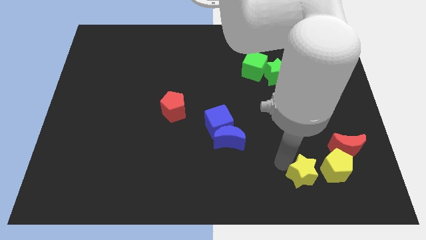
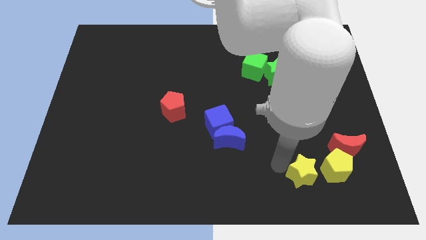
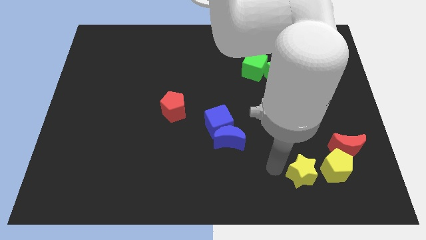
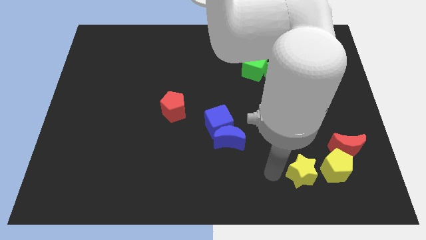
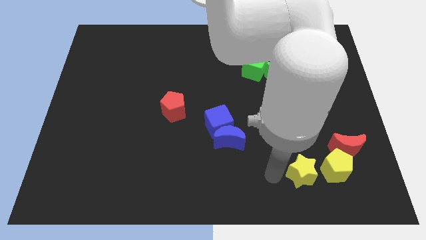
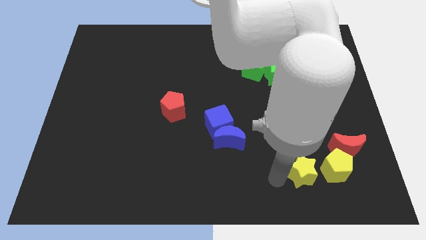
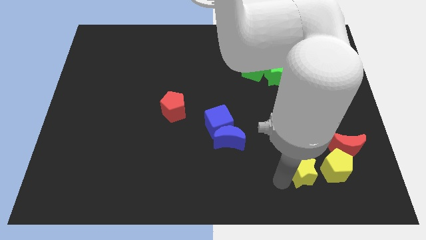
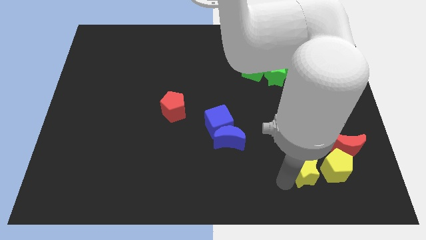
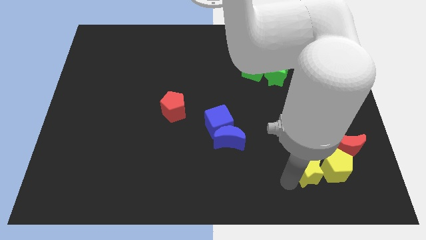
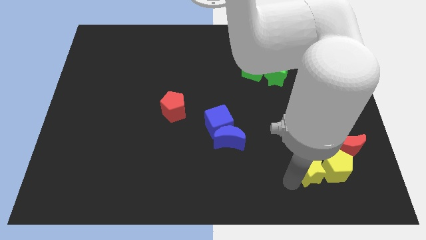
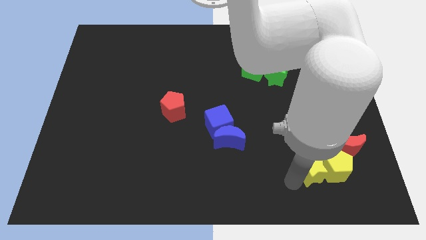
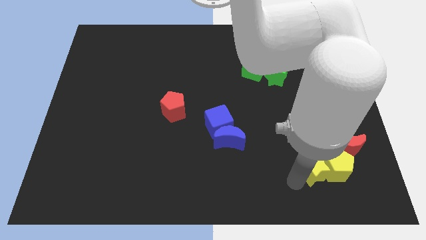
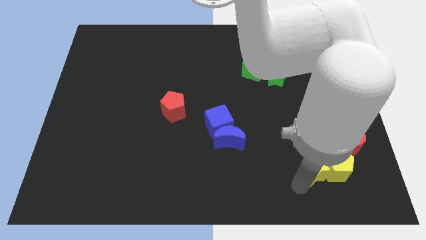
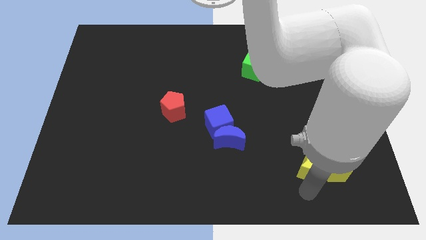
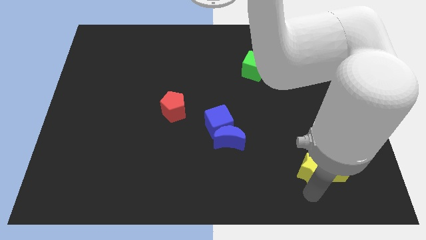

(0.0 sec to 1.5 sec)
slide the yellow star into the left side of the yellow pentagon

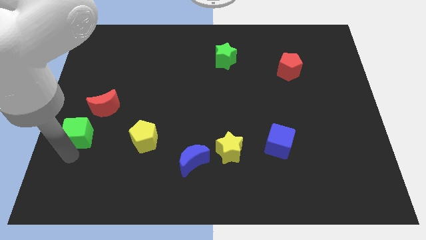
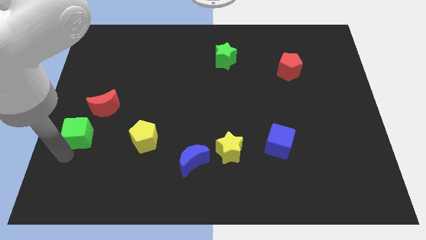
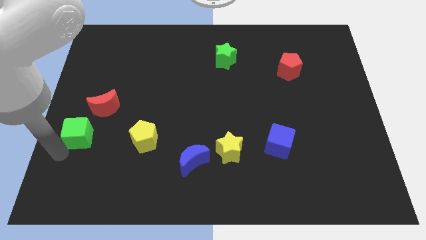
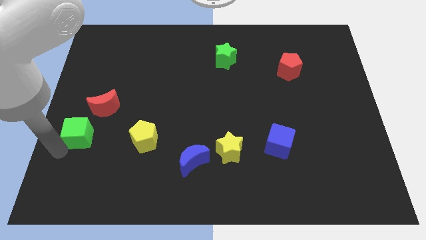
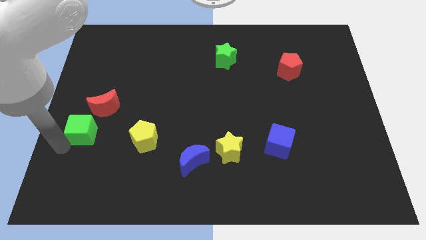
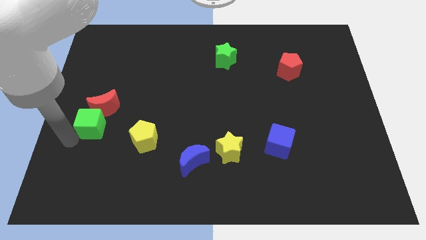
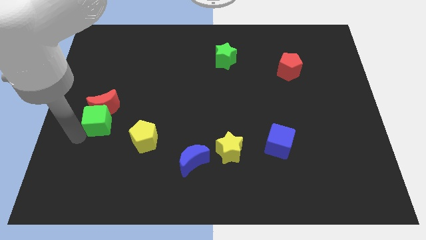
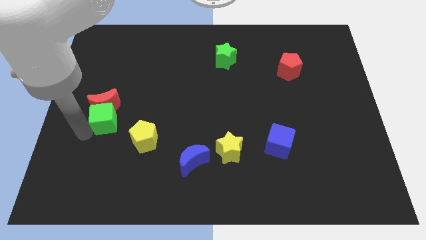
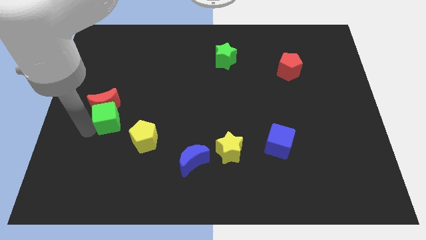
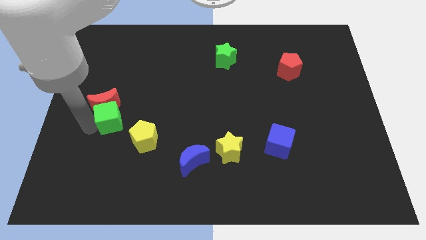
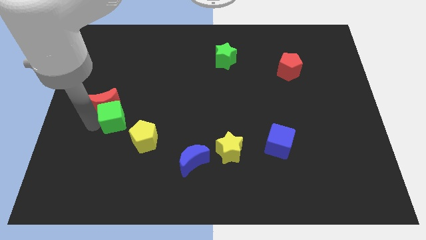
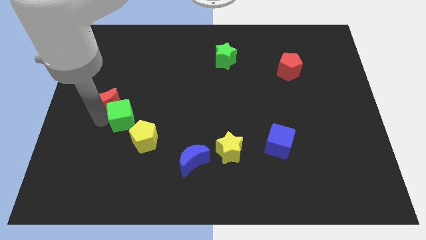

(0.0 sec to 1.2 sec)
push the green cube diagonally in between the red crescent and yellow pentagon

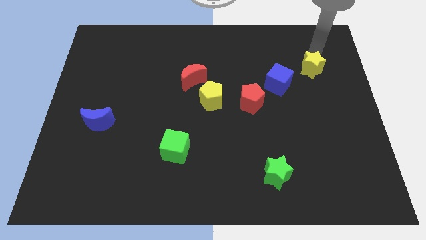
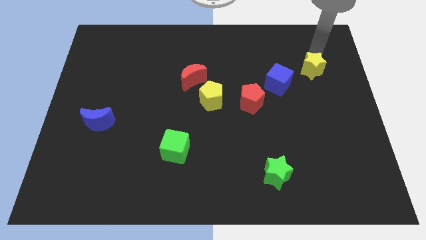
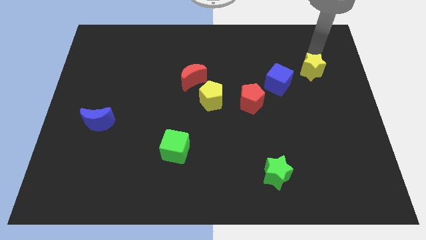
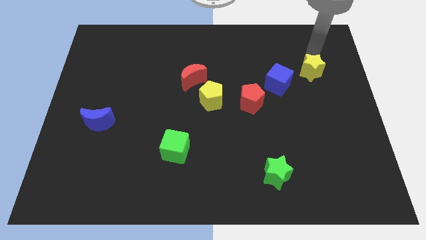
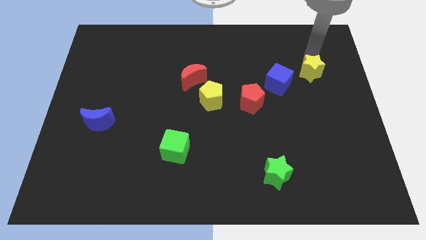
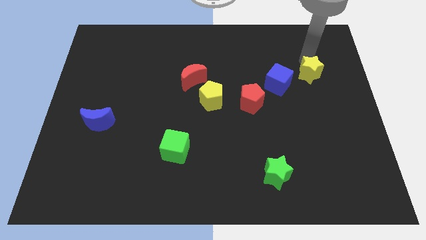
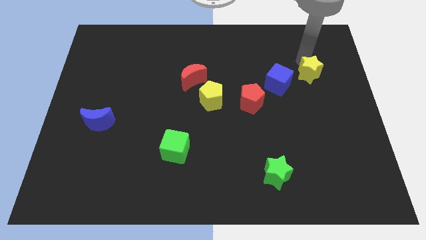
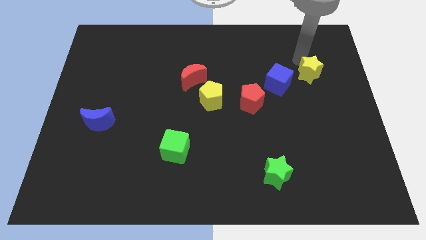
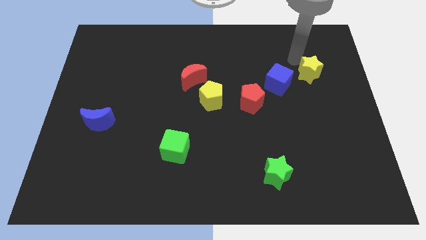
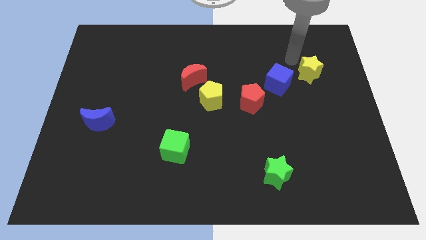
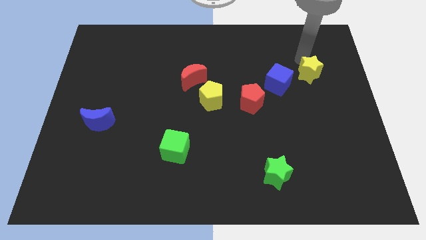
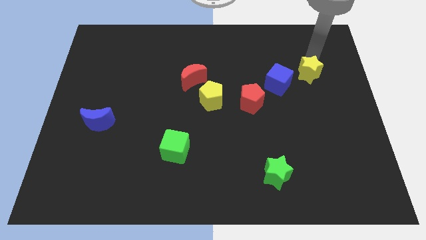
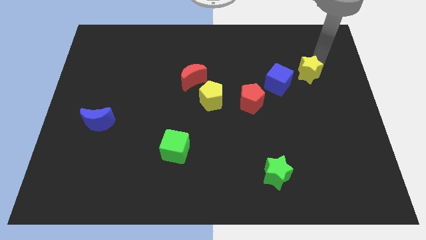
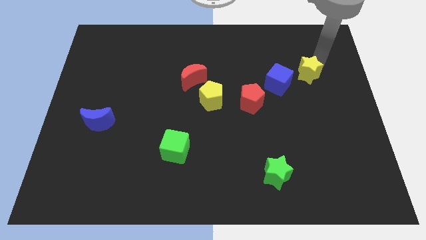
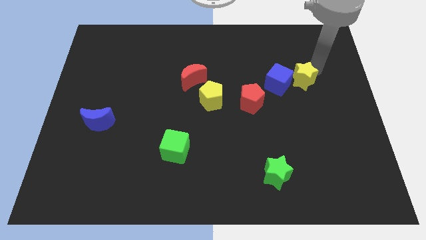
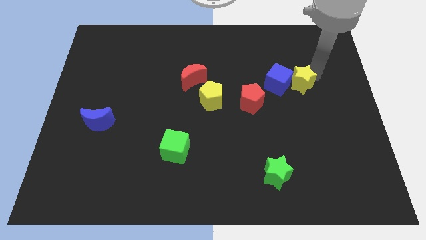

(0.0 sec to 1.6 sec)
place yellow star to the right of the blue cube

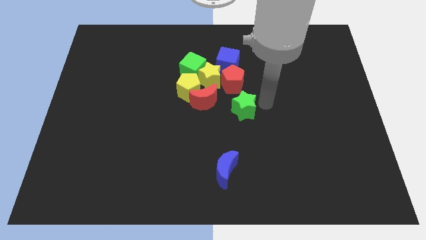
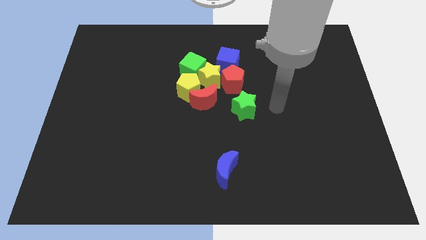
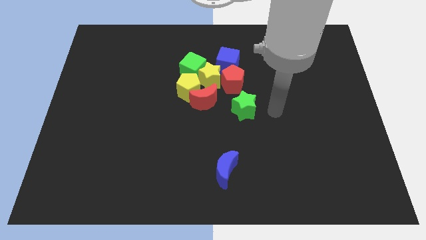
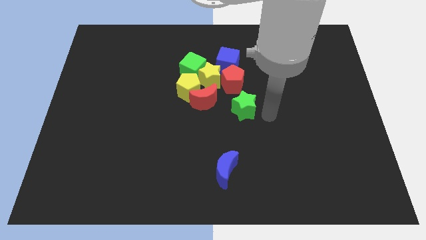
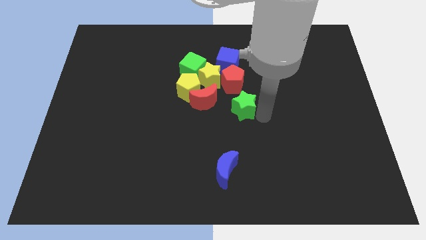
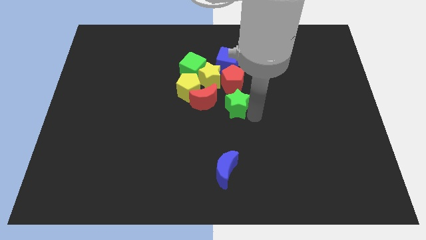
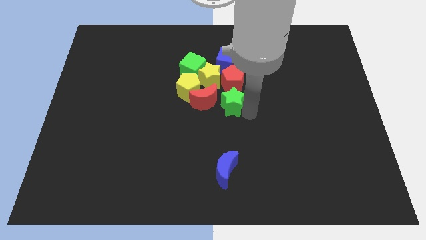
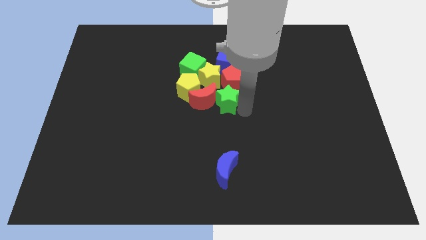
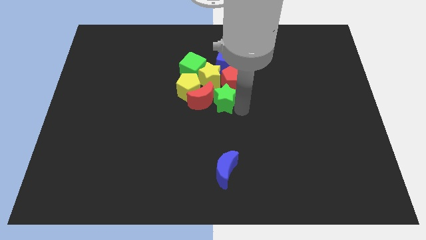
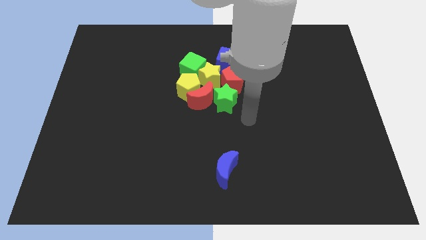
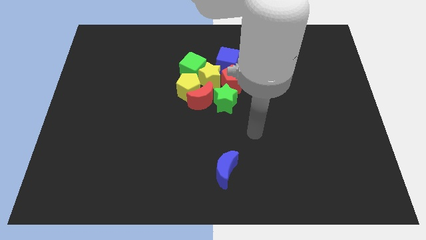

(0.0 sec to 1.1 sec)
push the green star into the red moon

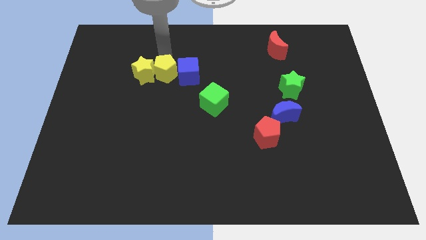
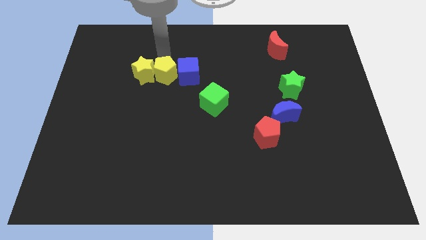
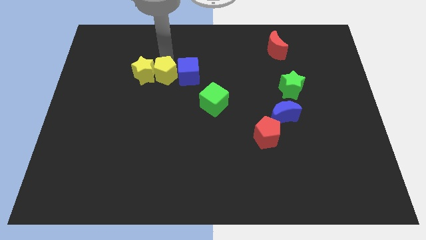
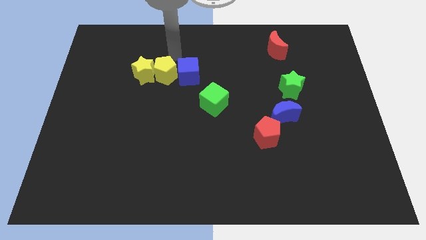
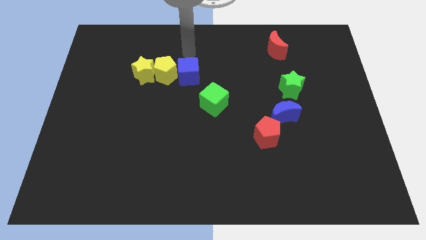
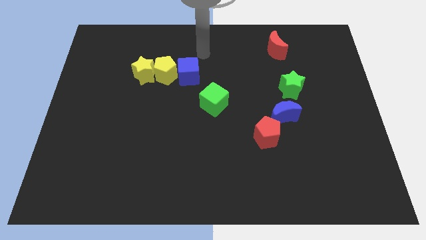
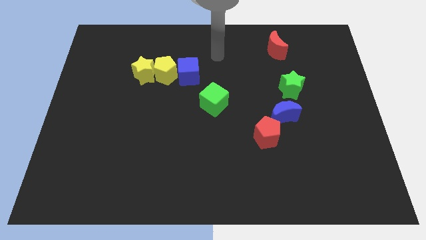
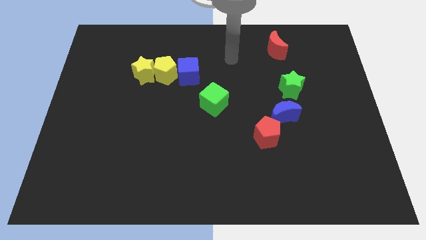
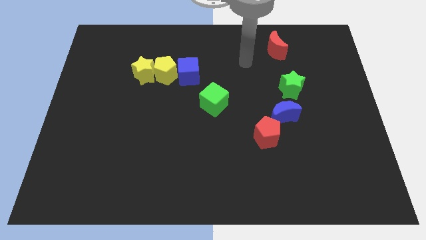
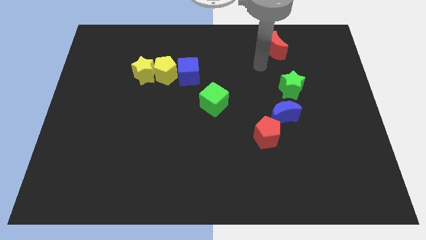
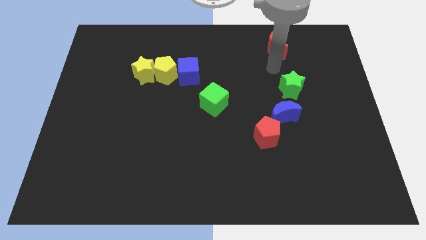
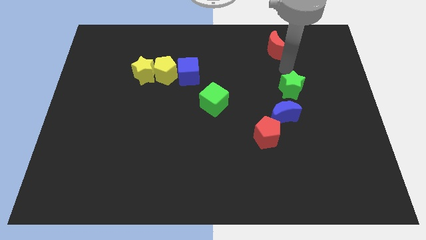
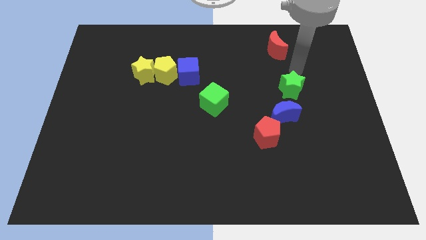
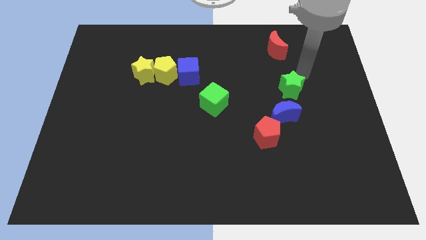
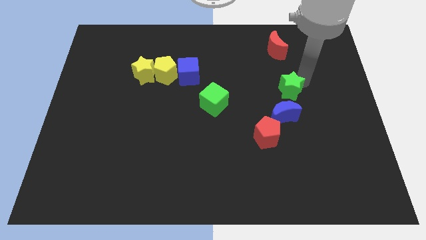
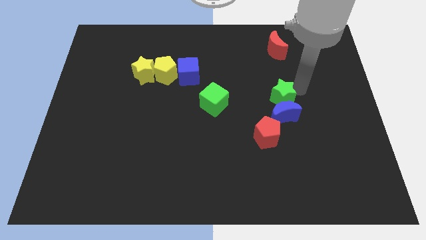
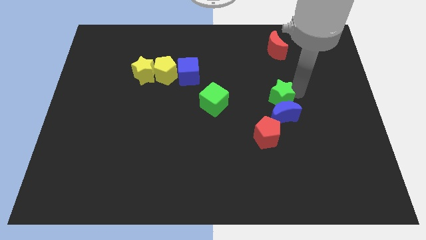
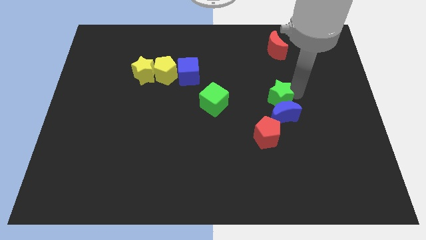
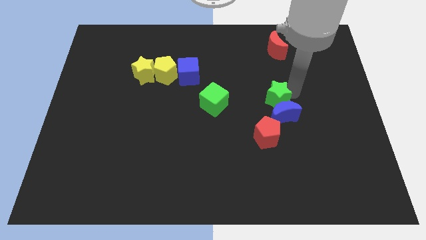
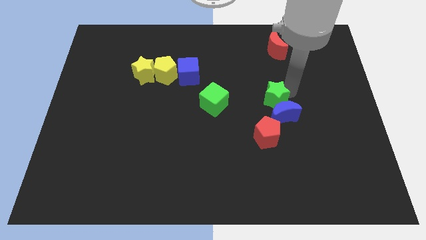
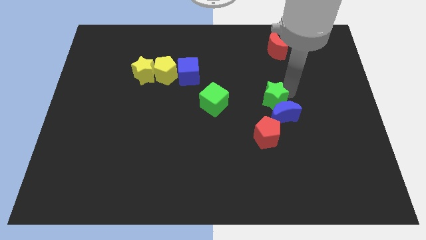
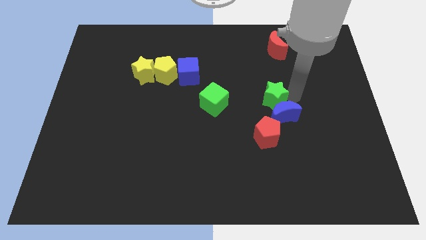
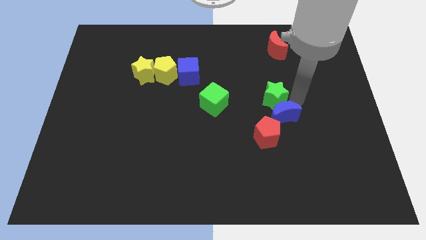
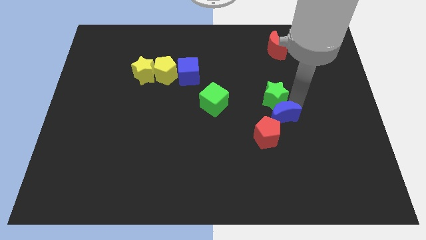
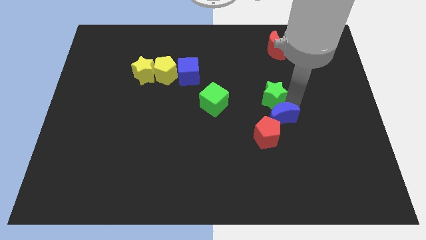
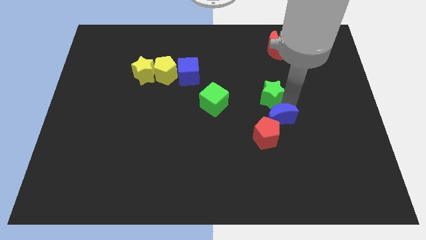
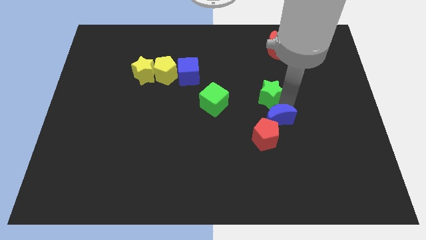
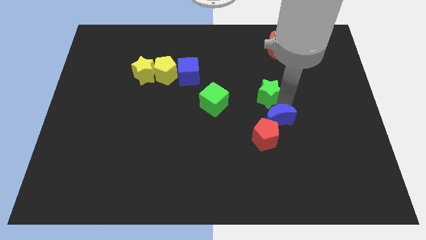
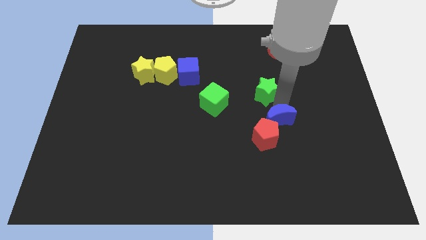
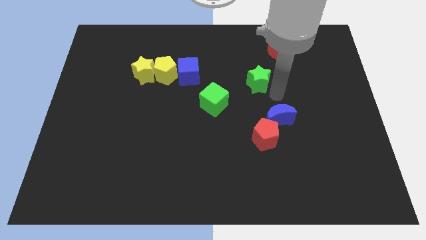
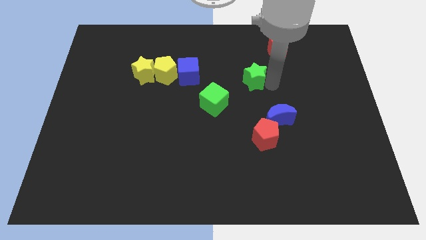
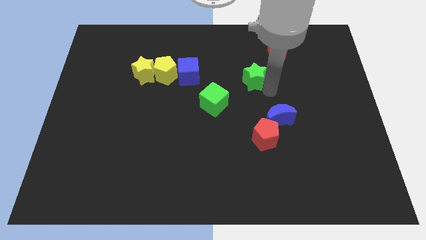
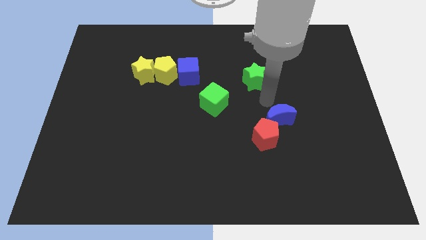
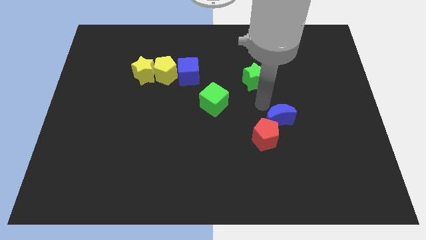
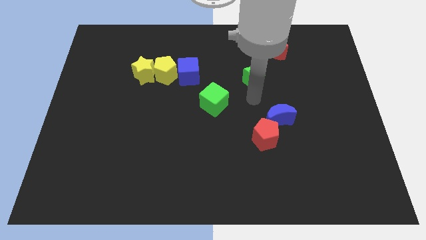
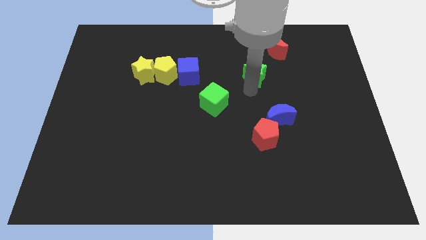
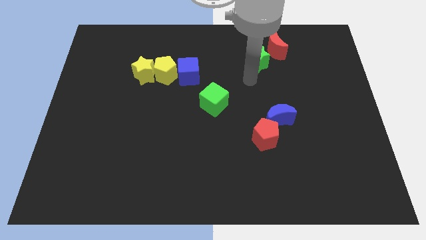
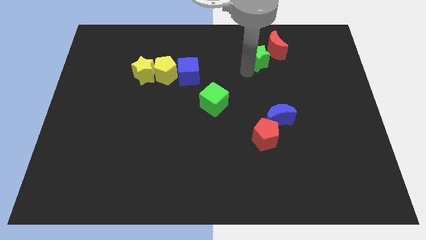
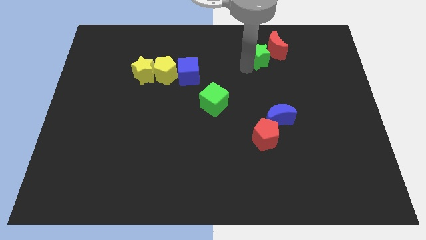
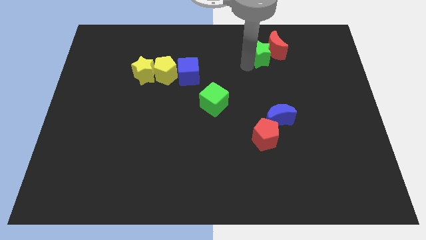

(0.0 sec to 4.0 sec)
move the green star to the left of red crescent
